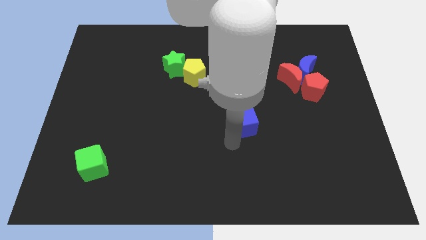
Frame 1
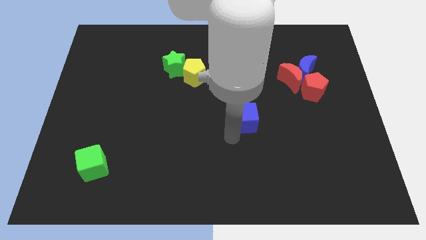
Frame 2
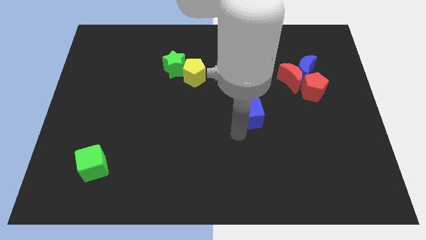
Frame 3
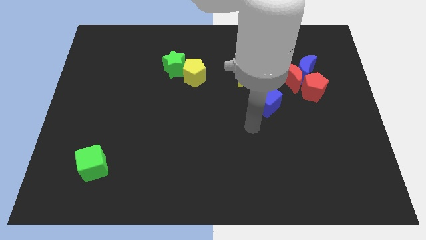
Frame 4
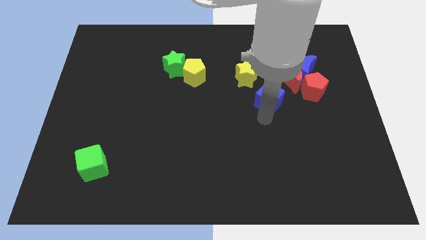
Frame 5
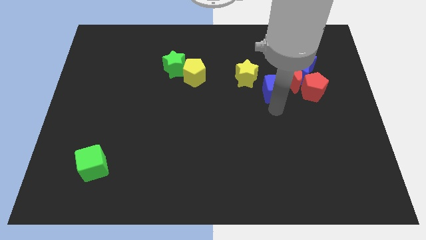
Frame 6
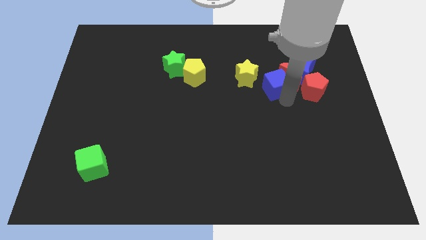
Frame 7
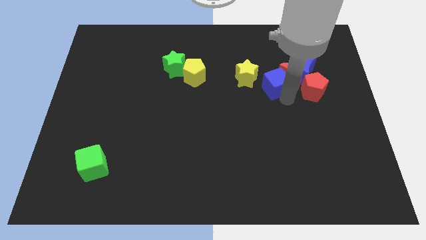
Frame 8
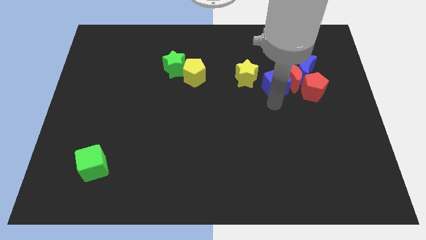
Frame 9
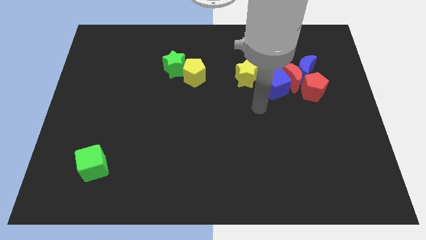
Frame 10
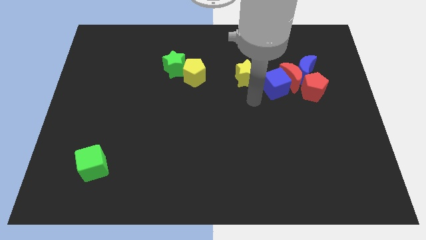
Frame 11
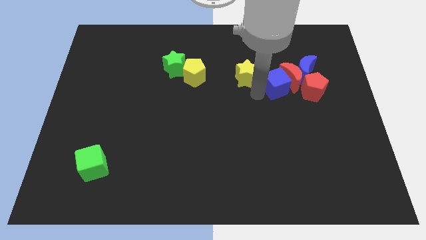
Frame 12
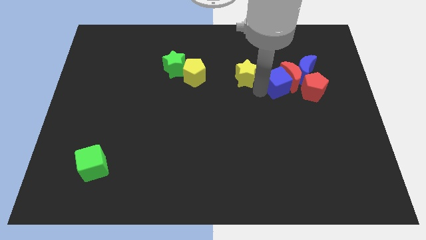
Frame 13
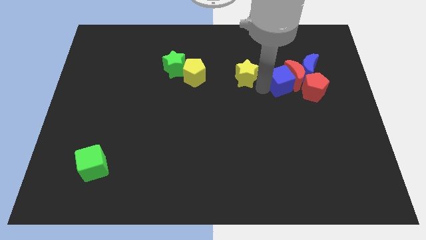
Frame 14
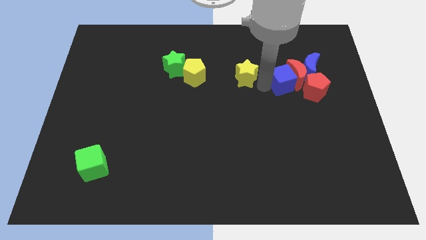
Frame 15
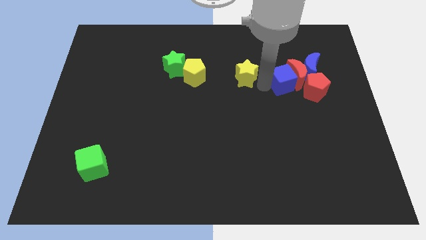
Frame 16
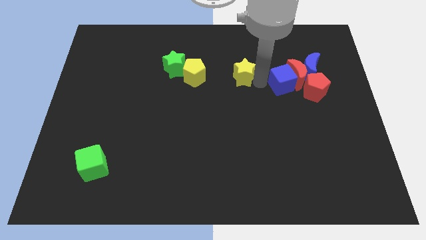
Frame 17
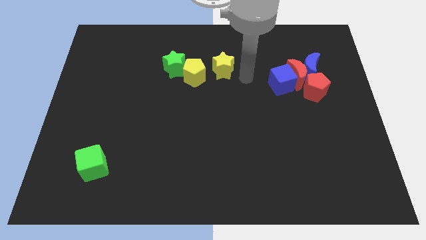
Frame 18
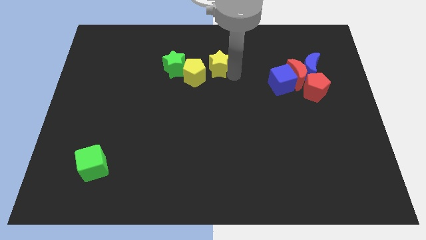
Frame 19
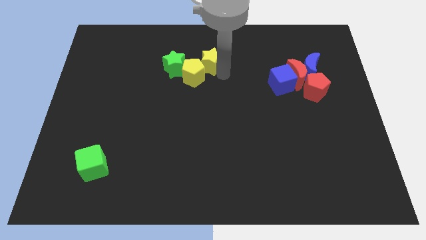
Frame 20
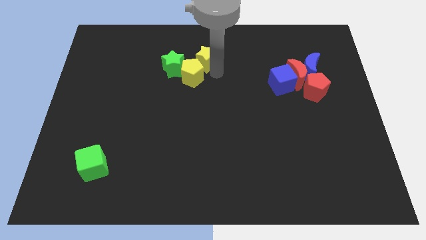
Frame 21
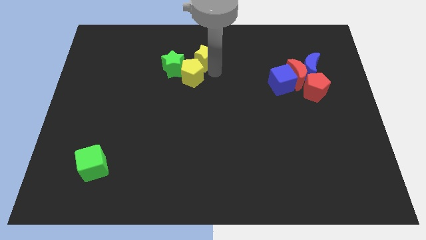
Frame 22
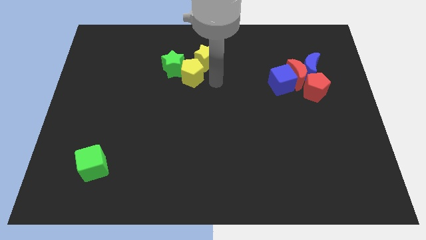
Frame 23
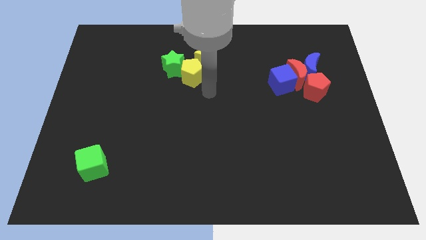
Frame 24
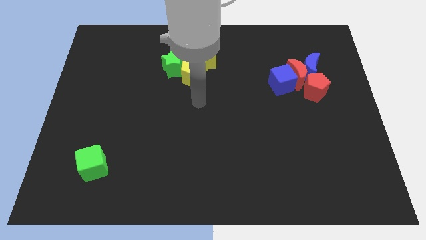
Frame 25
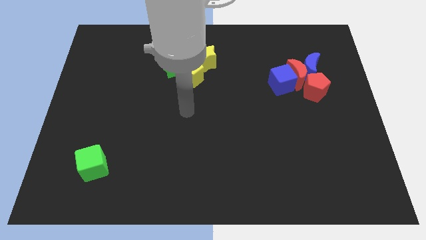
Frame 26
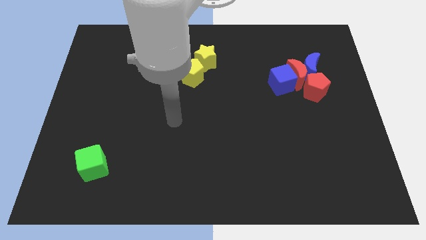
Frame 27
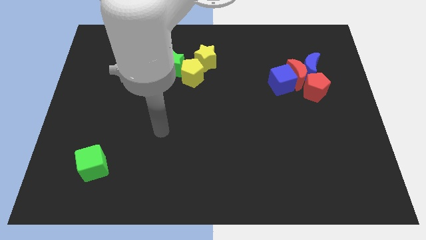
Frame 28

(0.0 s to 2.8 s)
move the blue cube into the red moon

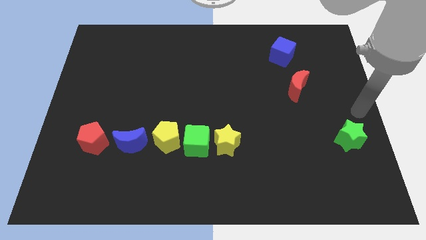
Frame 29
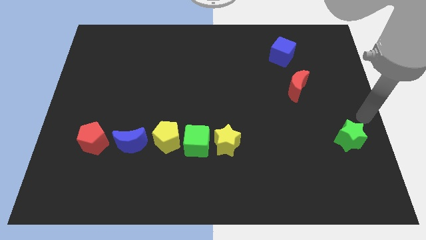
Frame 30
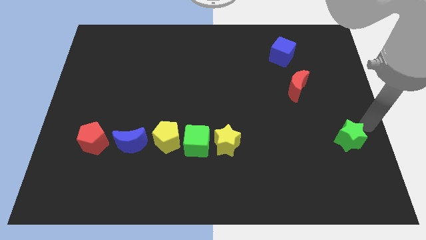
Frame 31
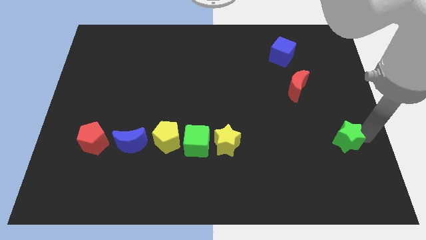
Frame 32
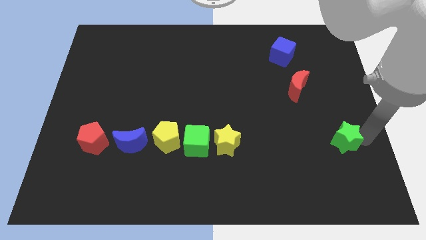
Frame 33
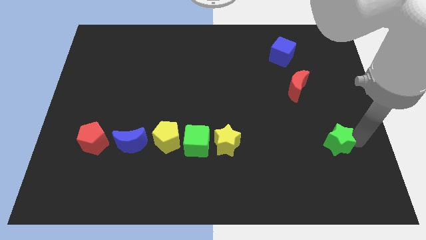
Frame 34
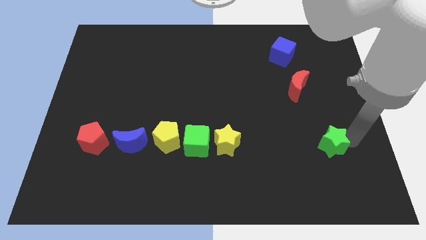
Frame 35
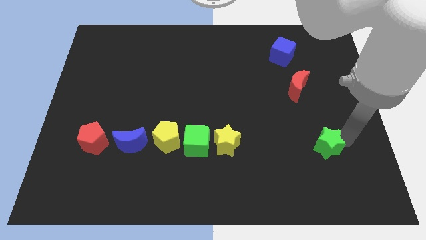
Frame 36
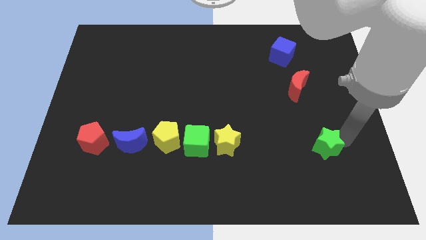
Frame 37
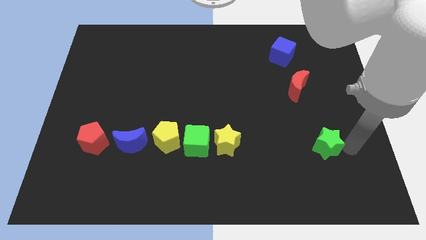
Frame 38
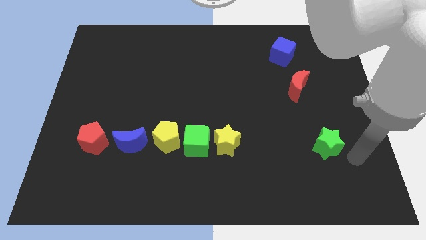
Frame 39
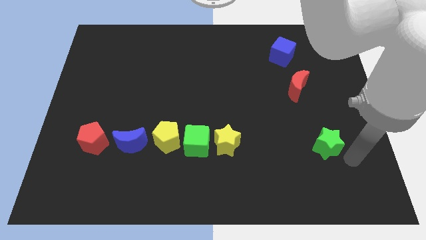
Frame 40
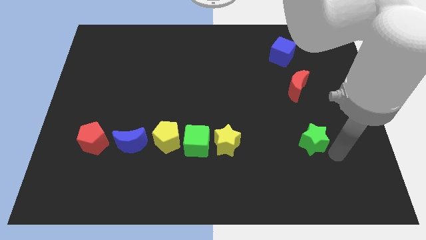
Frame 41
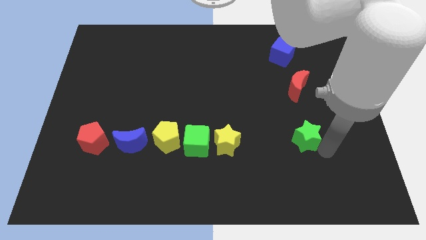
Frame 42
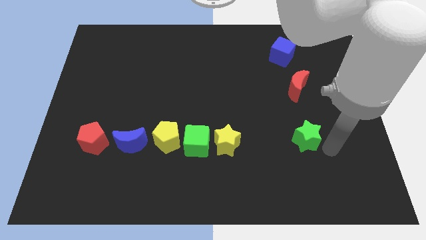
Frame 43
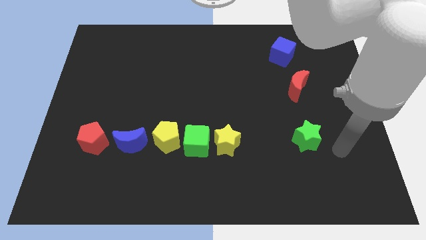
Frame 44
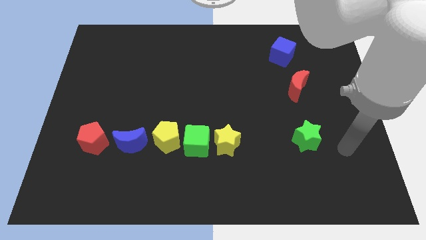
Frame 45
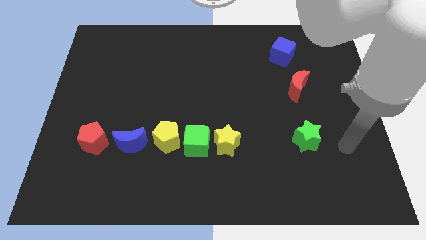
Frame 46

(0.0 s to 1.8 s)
move the green star slightly to the left

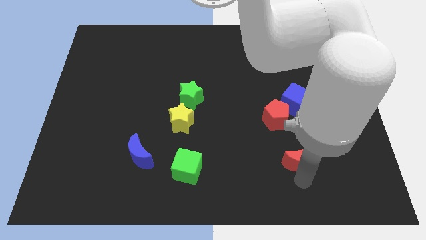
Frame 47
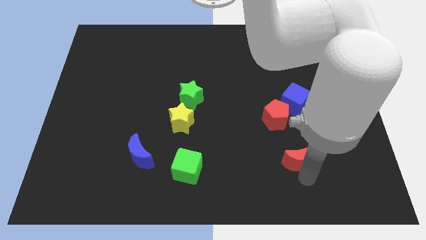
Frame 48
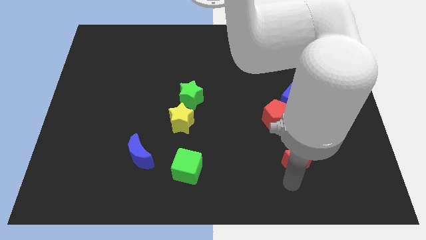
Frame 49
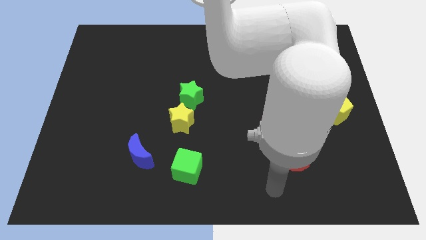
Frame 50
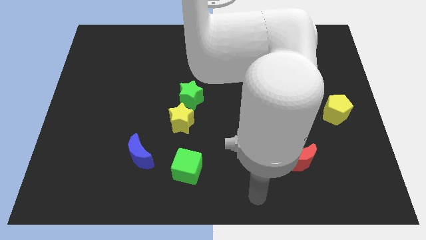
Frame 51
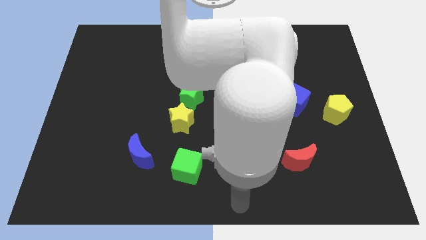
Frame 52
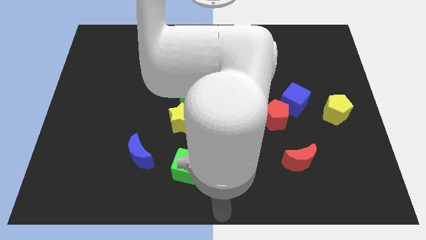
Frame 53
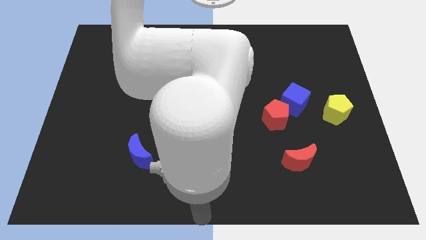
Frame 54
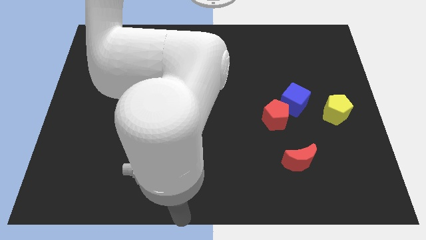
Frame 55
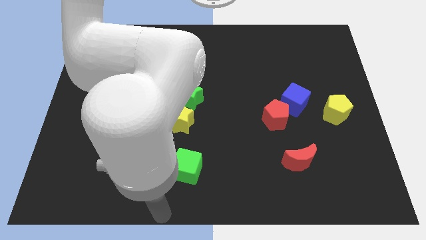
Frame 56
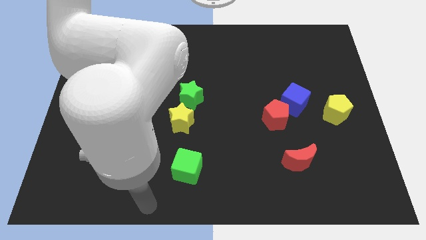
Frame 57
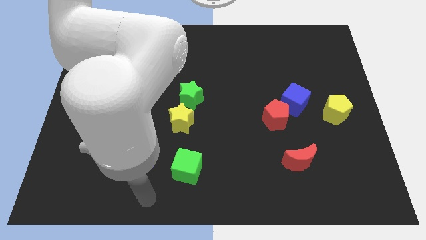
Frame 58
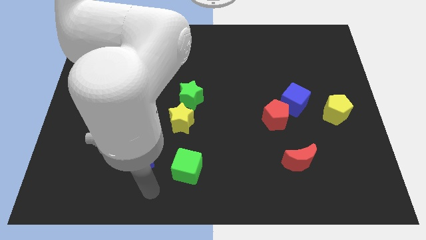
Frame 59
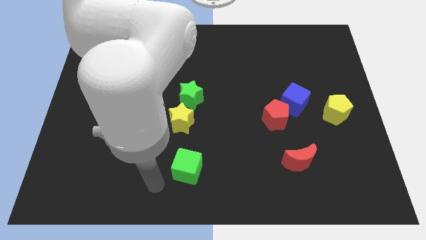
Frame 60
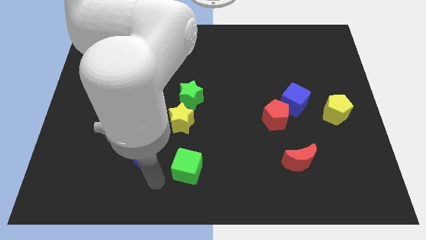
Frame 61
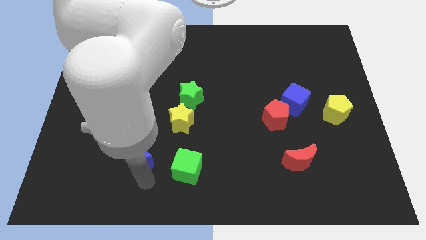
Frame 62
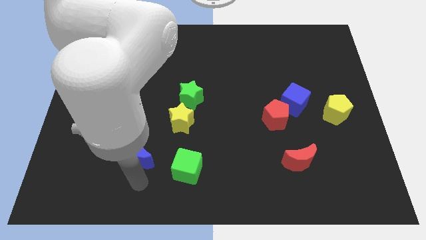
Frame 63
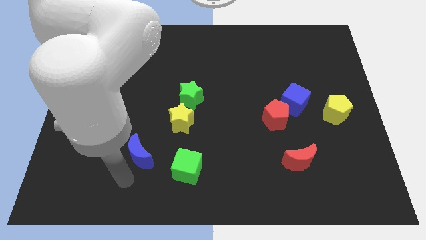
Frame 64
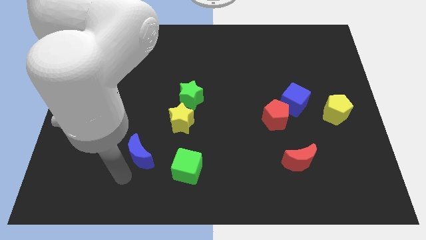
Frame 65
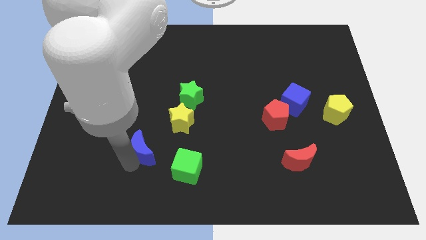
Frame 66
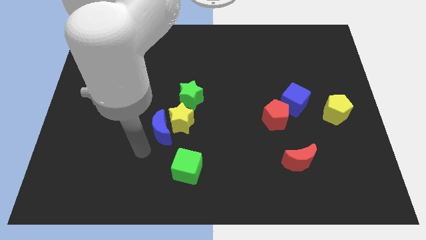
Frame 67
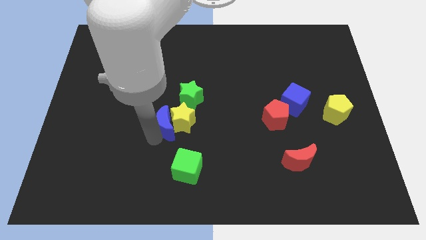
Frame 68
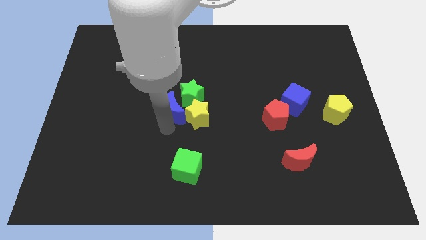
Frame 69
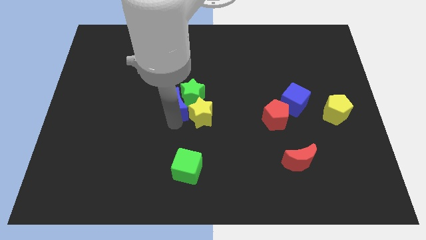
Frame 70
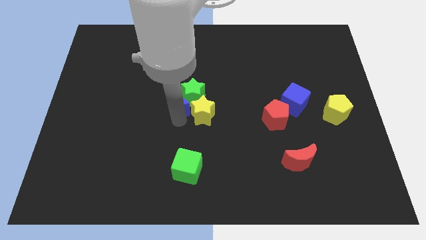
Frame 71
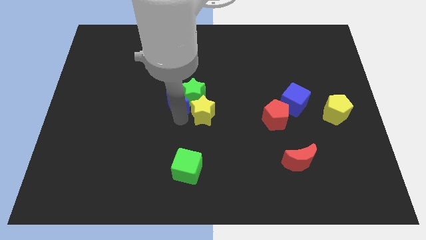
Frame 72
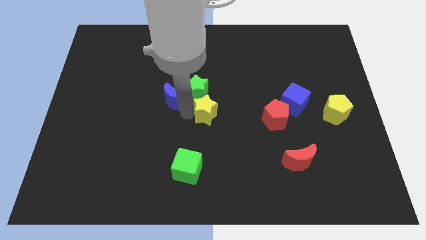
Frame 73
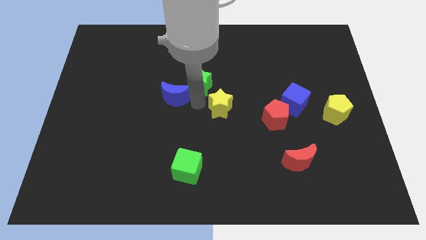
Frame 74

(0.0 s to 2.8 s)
push the blue crescent into the green star

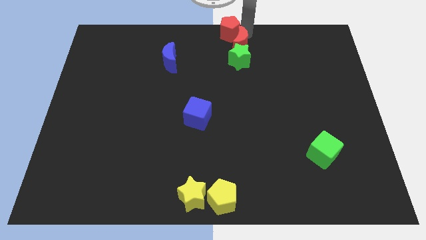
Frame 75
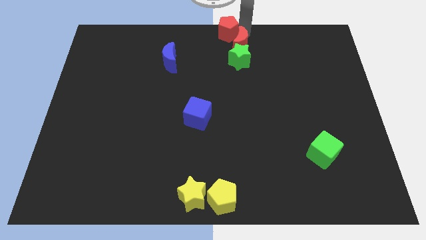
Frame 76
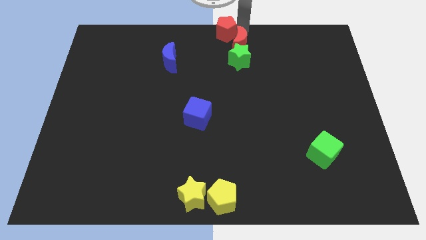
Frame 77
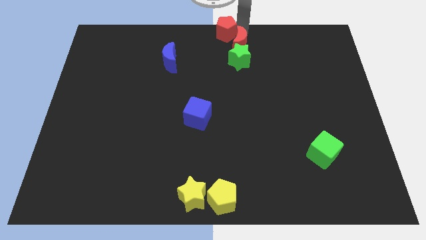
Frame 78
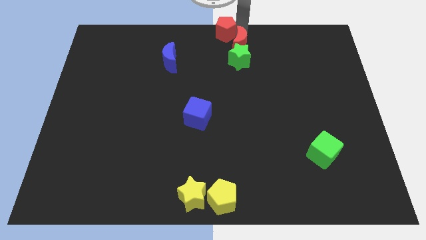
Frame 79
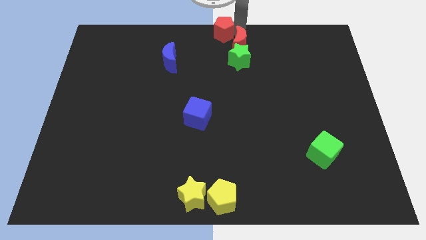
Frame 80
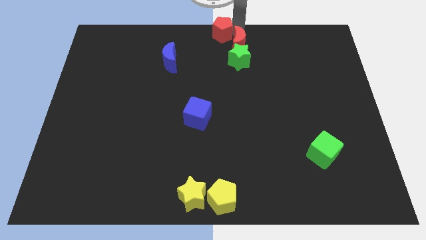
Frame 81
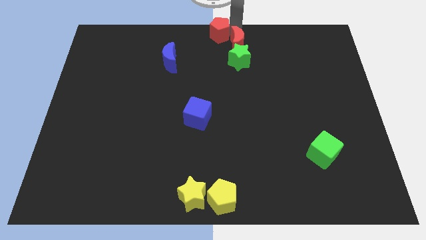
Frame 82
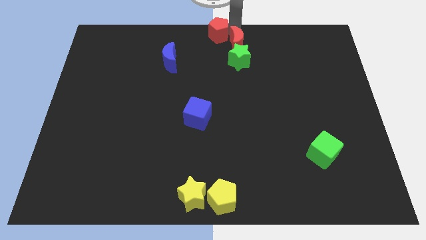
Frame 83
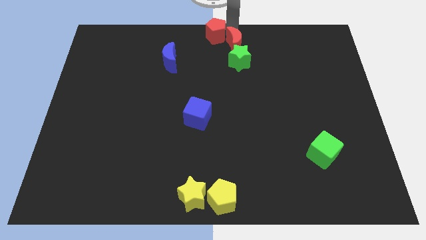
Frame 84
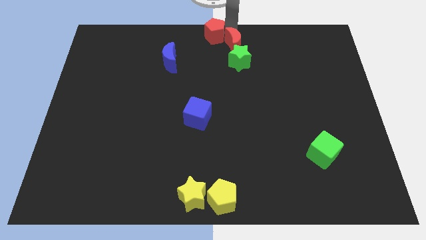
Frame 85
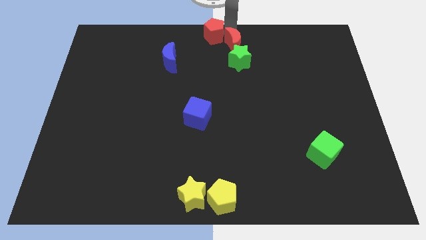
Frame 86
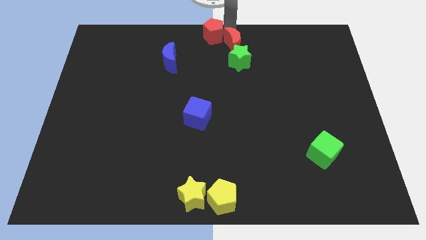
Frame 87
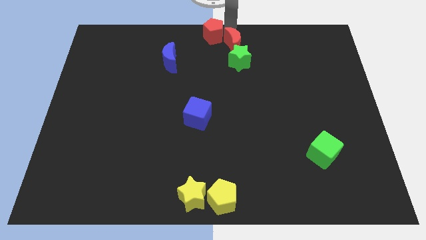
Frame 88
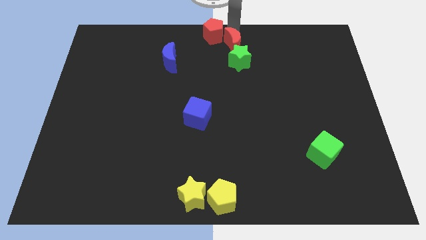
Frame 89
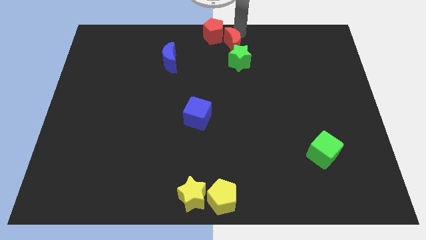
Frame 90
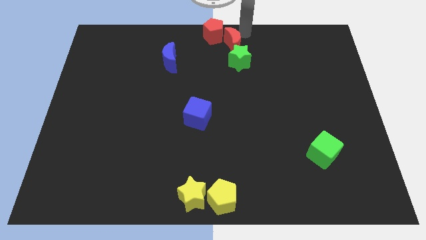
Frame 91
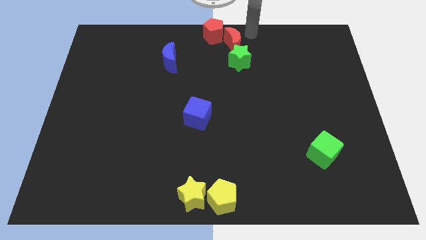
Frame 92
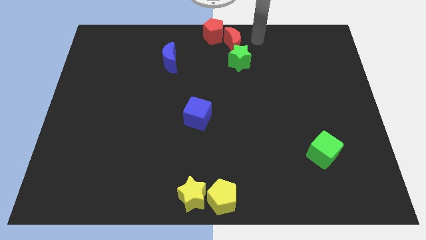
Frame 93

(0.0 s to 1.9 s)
place the red crescent and red pentagon at the top center
